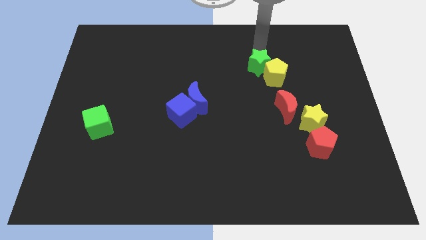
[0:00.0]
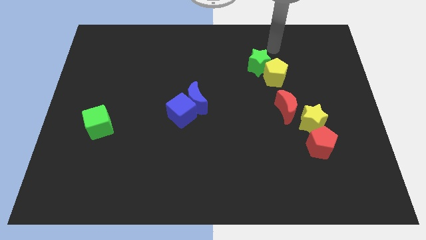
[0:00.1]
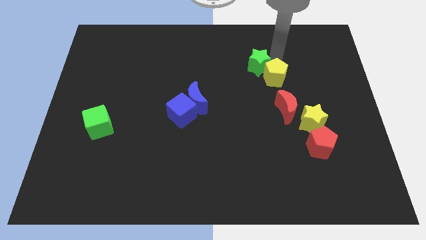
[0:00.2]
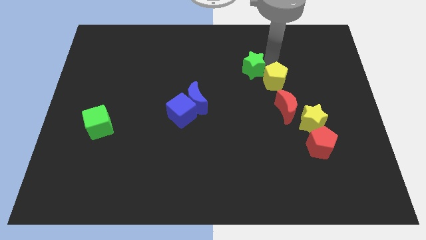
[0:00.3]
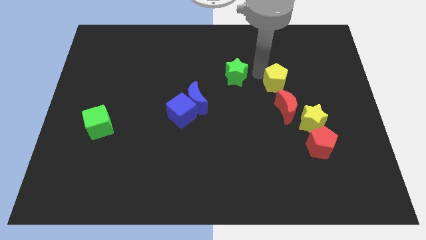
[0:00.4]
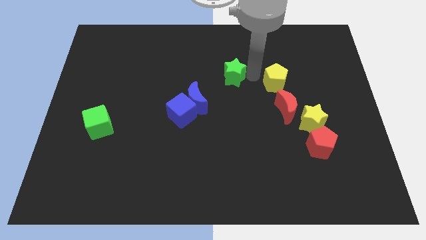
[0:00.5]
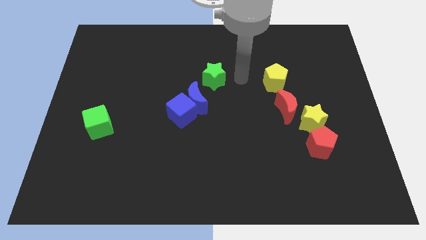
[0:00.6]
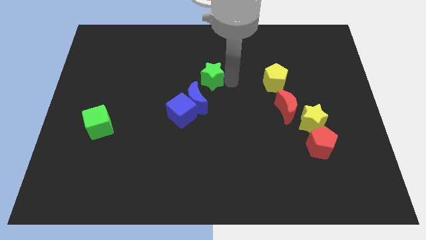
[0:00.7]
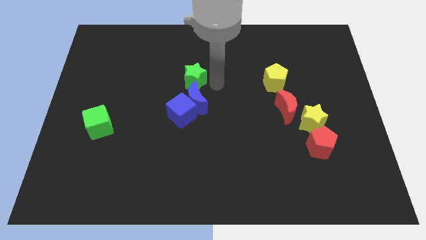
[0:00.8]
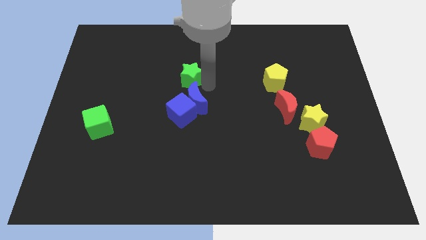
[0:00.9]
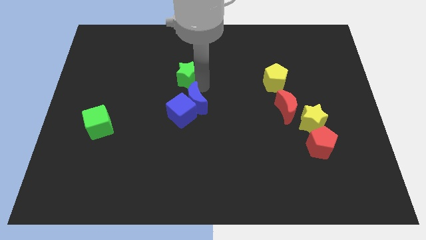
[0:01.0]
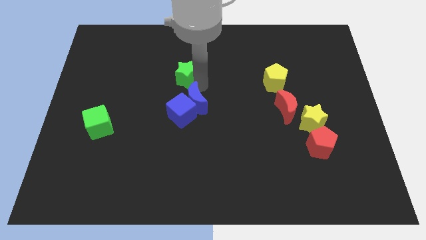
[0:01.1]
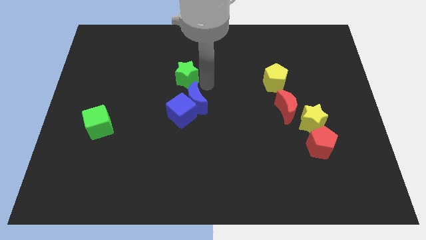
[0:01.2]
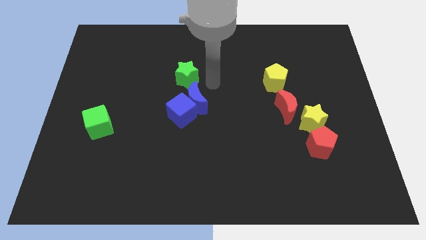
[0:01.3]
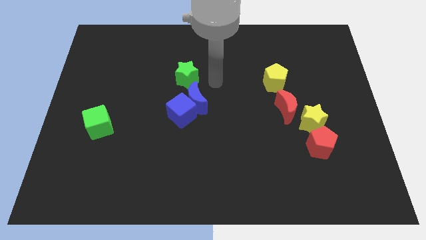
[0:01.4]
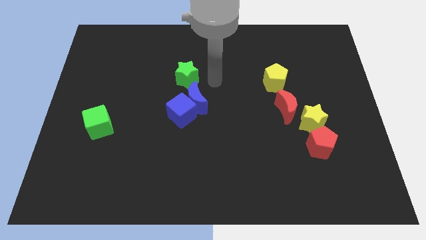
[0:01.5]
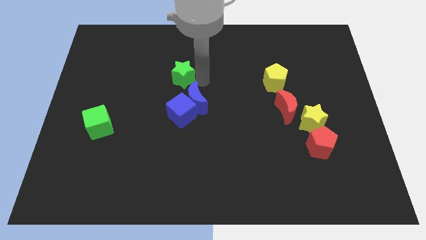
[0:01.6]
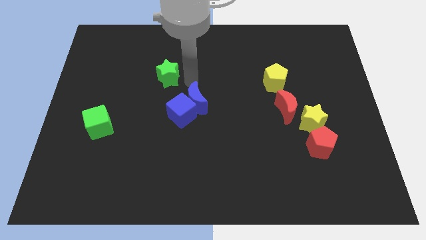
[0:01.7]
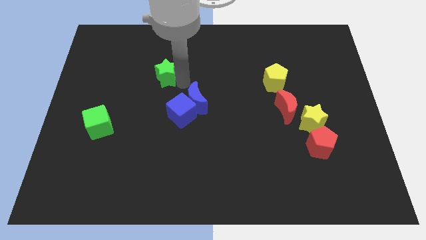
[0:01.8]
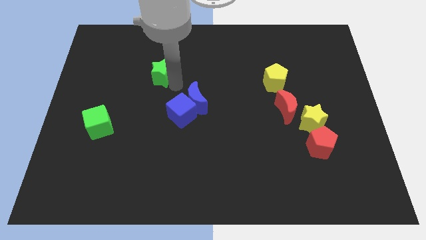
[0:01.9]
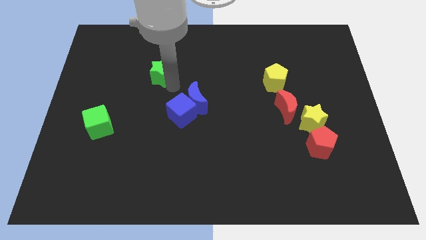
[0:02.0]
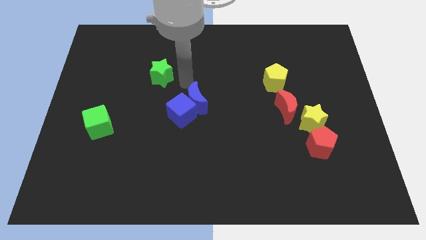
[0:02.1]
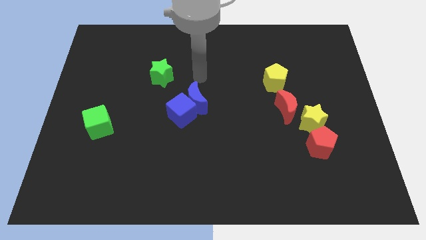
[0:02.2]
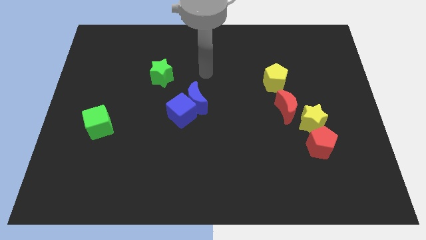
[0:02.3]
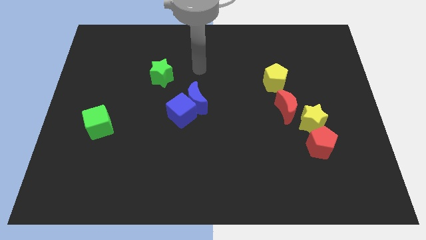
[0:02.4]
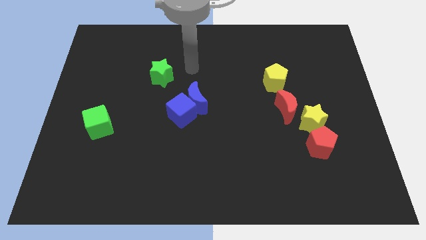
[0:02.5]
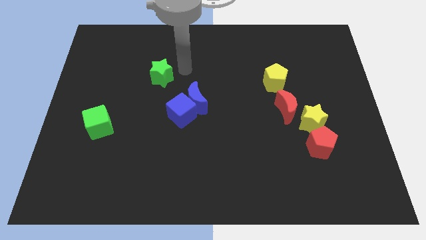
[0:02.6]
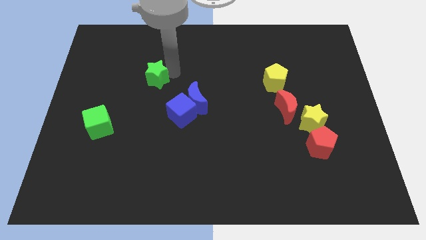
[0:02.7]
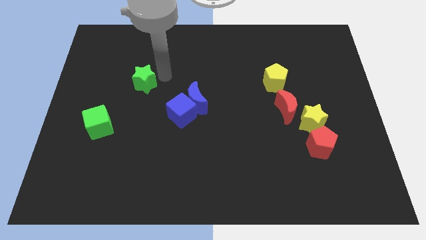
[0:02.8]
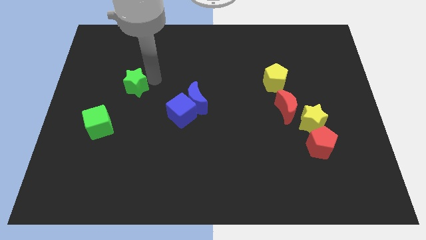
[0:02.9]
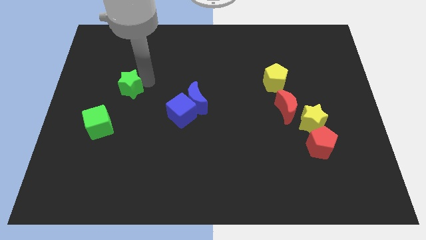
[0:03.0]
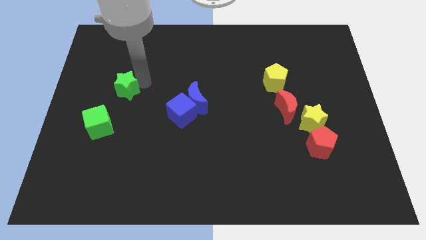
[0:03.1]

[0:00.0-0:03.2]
move green star to the top right of green cube

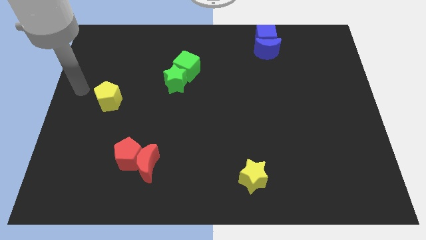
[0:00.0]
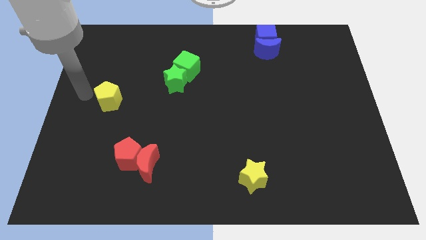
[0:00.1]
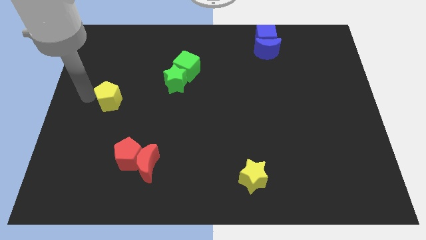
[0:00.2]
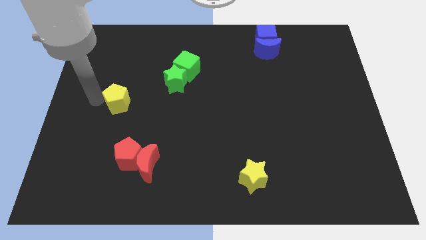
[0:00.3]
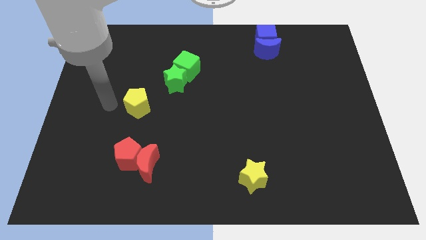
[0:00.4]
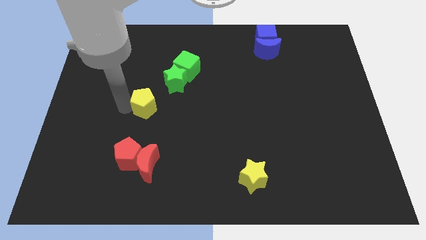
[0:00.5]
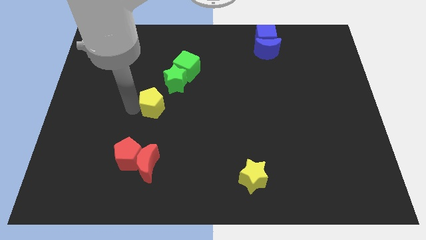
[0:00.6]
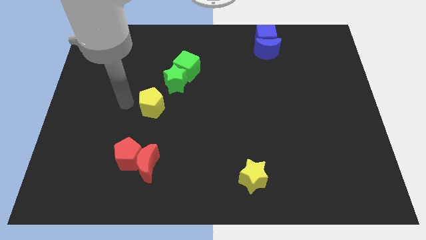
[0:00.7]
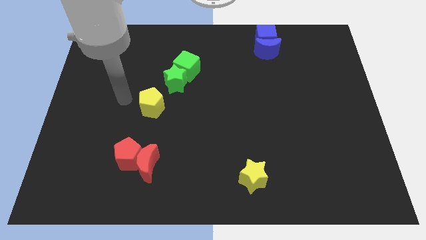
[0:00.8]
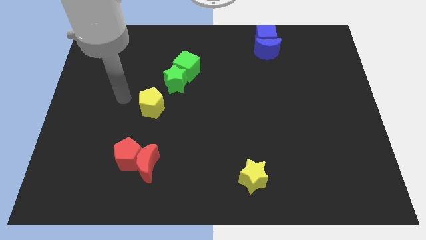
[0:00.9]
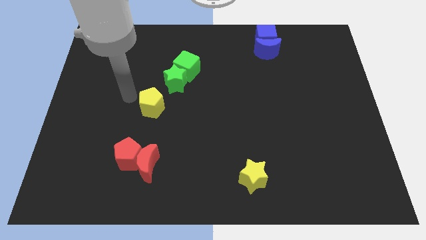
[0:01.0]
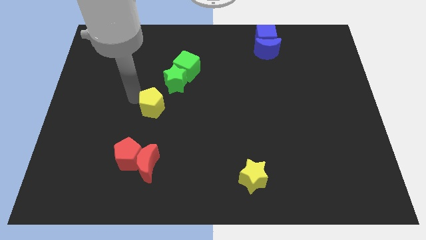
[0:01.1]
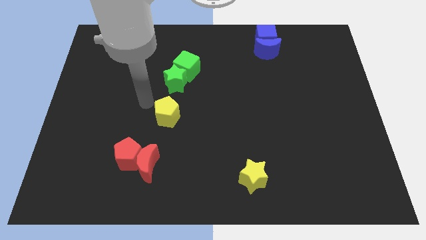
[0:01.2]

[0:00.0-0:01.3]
place the yellow pentagon below the green star

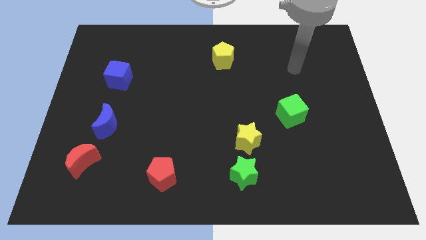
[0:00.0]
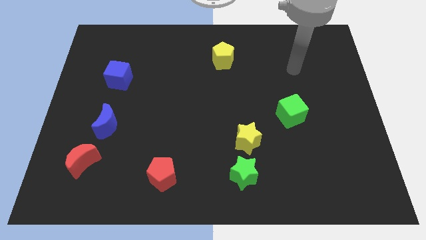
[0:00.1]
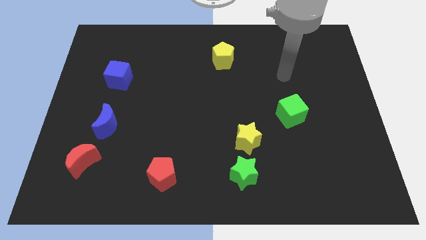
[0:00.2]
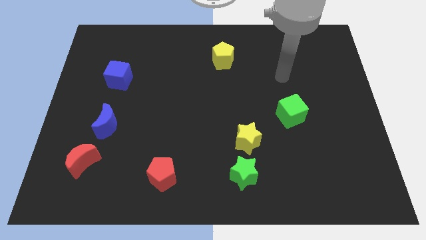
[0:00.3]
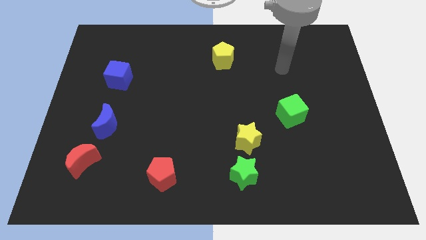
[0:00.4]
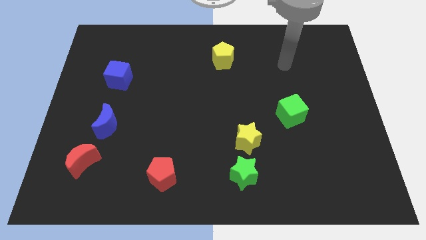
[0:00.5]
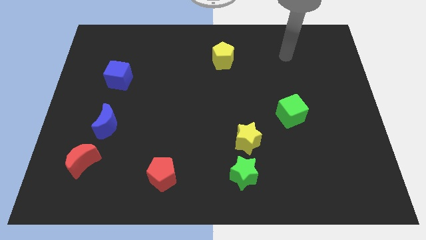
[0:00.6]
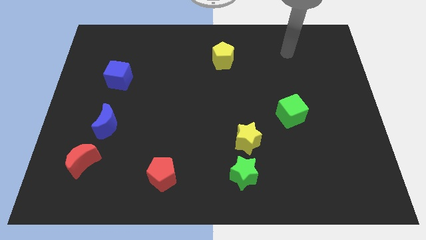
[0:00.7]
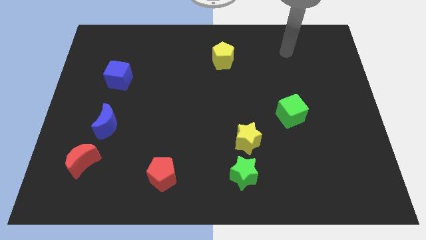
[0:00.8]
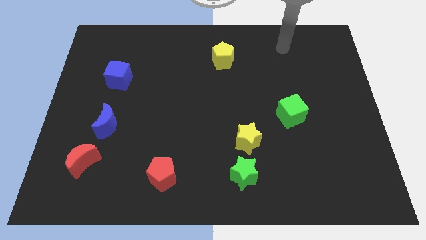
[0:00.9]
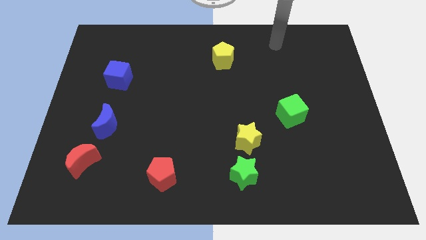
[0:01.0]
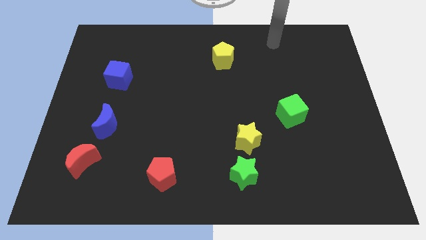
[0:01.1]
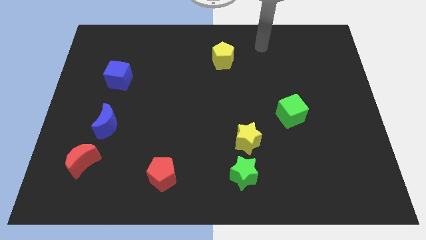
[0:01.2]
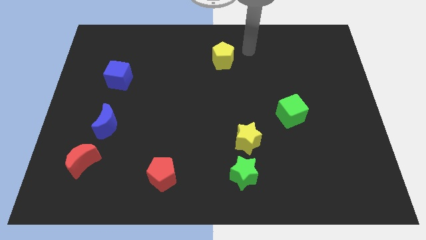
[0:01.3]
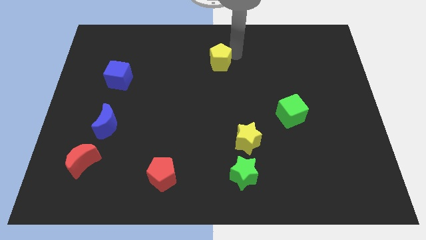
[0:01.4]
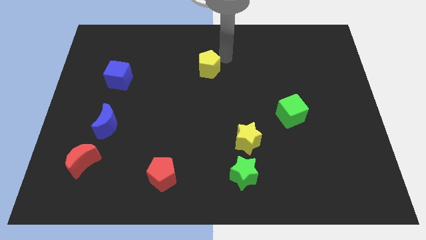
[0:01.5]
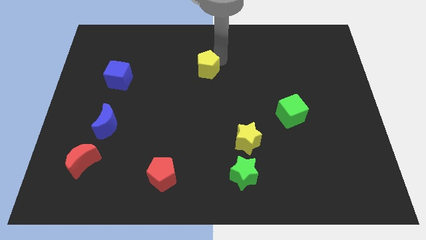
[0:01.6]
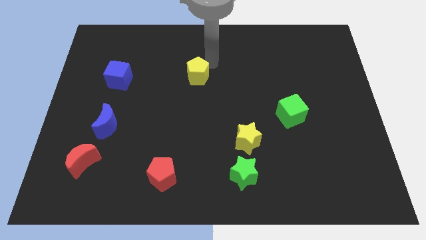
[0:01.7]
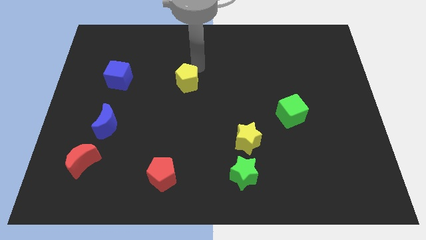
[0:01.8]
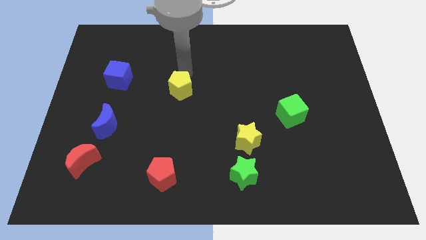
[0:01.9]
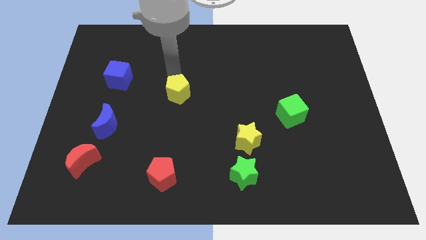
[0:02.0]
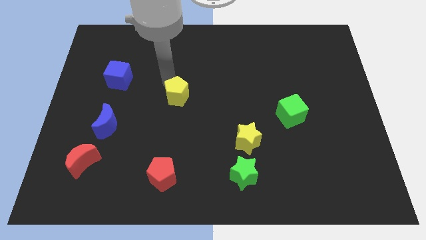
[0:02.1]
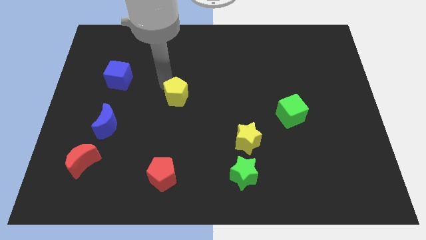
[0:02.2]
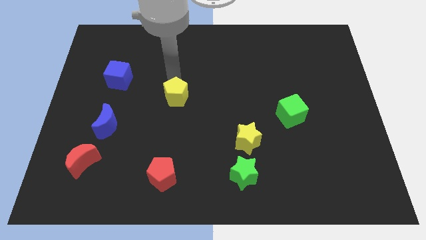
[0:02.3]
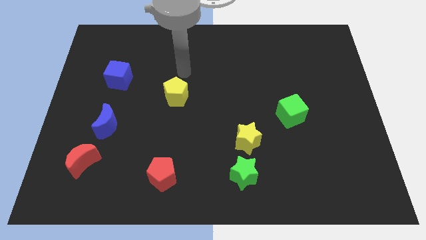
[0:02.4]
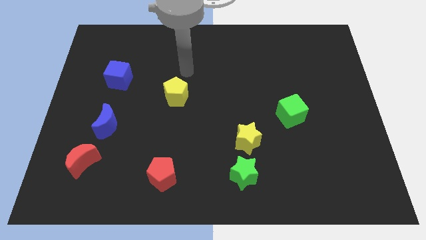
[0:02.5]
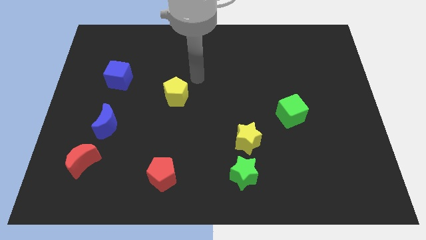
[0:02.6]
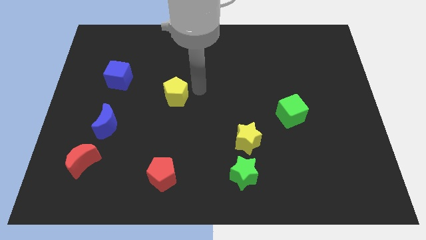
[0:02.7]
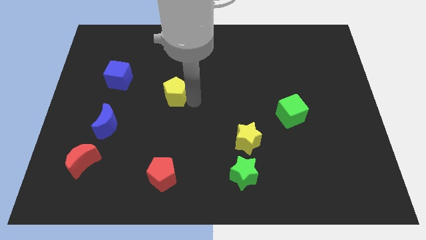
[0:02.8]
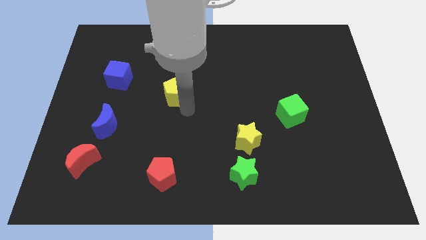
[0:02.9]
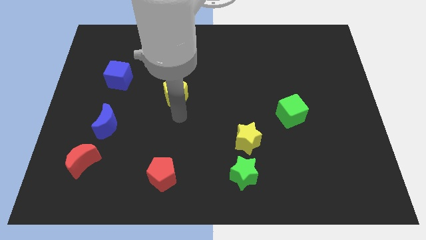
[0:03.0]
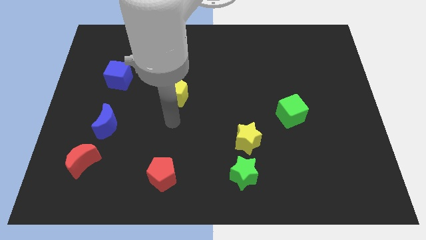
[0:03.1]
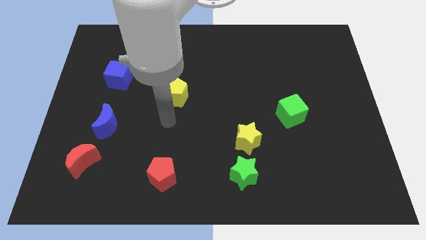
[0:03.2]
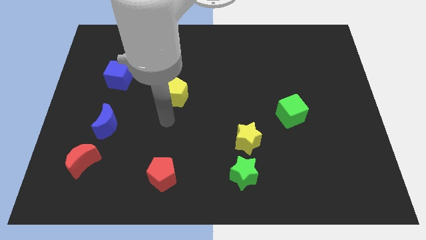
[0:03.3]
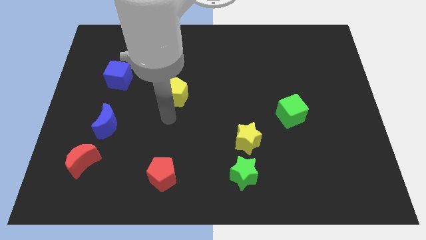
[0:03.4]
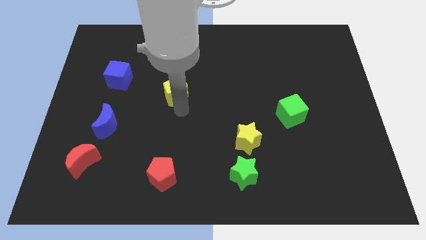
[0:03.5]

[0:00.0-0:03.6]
place the yellow pentagon vertically at the top side of the red pentagon

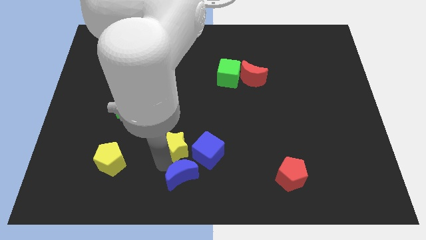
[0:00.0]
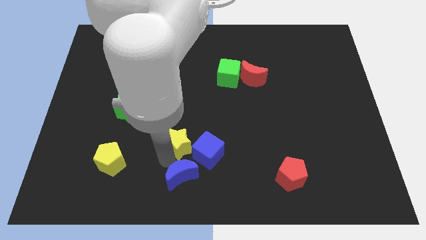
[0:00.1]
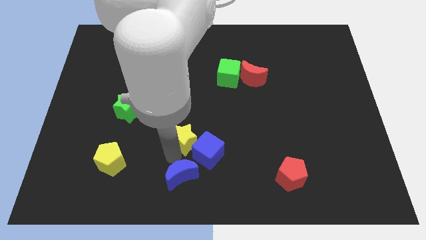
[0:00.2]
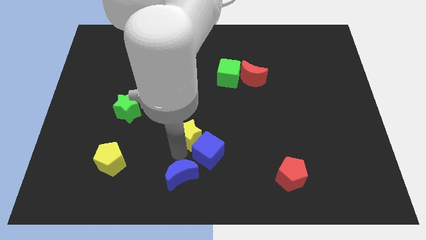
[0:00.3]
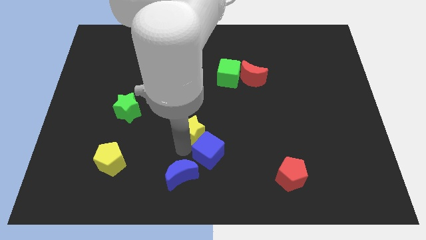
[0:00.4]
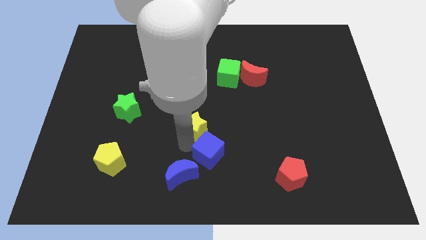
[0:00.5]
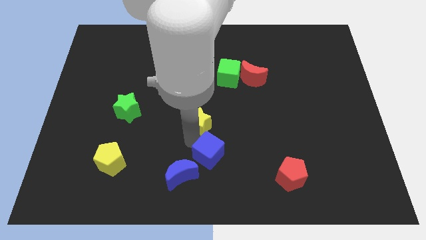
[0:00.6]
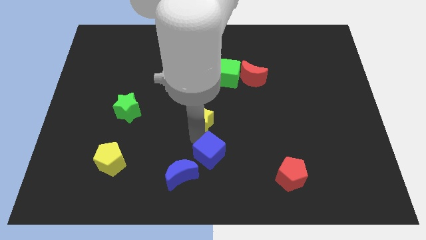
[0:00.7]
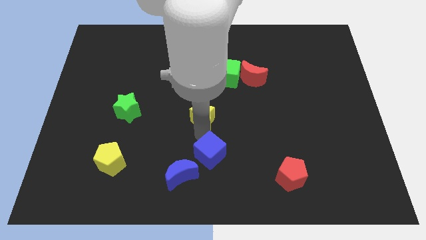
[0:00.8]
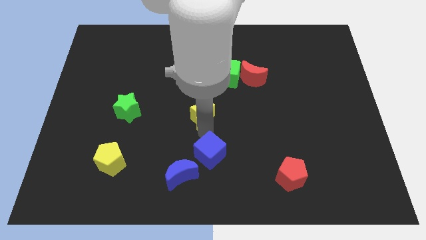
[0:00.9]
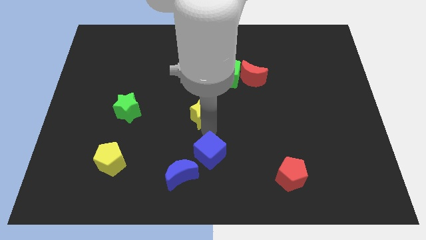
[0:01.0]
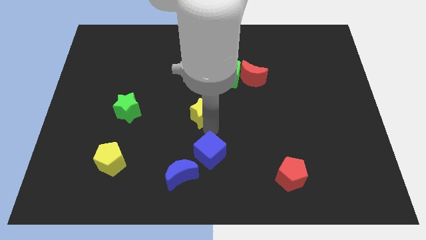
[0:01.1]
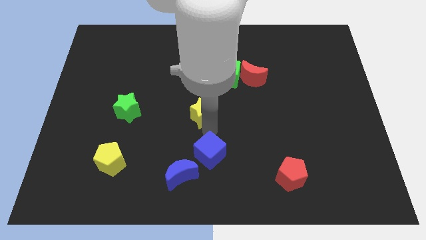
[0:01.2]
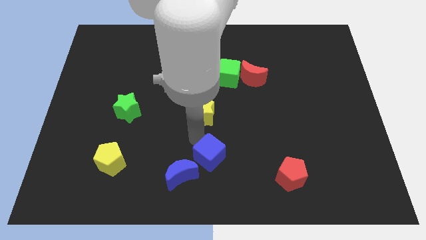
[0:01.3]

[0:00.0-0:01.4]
separate the yellow star from the blue moon
